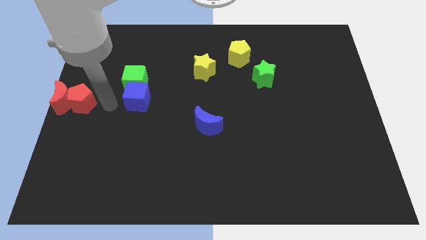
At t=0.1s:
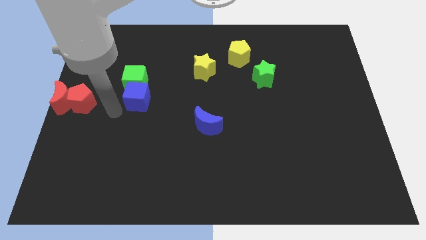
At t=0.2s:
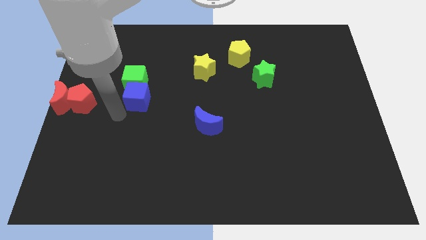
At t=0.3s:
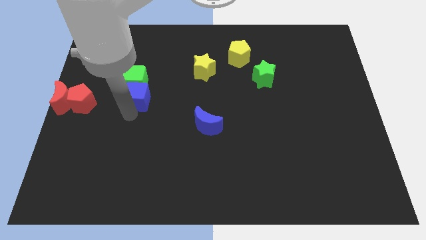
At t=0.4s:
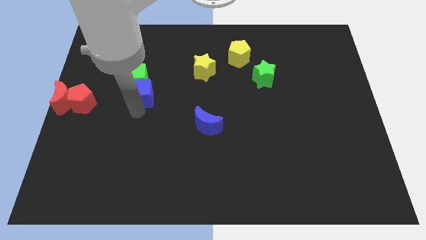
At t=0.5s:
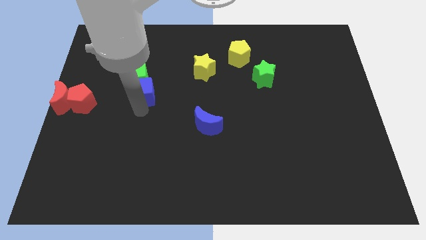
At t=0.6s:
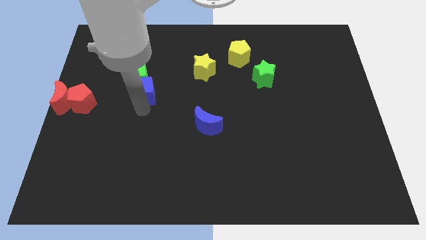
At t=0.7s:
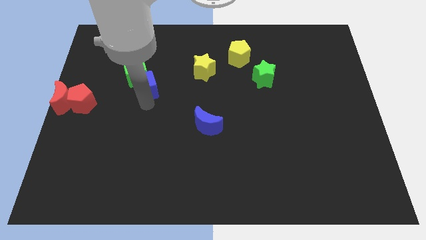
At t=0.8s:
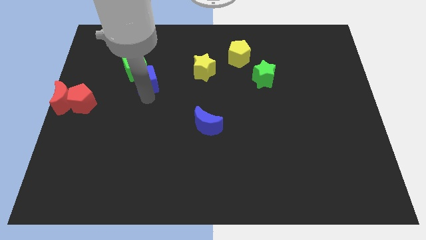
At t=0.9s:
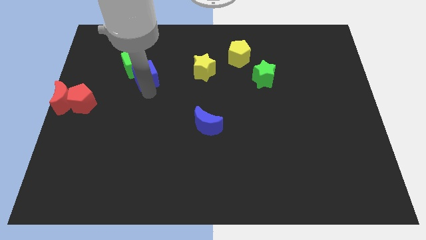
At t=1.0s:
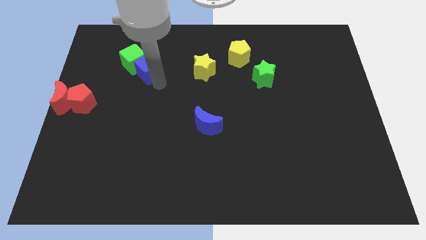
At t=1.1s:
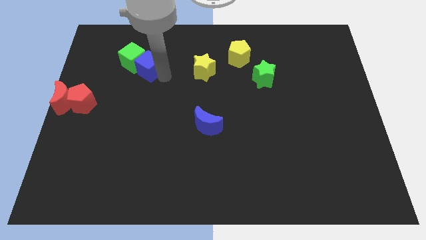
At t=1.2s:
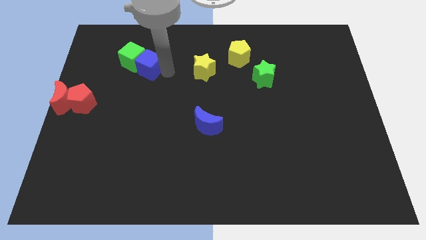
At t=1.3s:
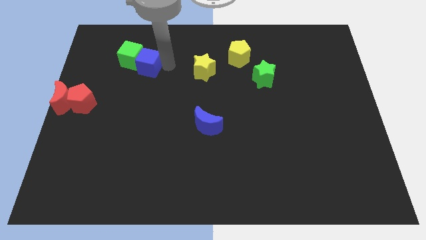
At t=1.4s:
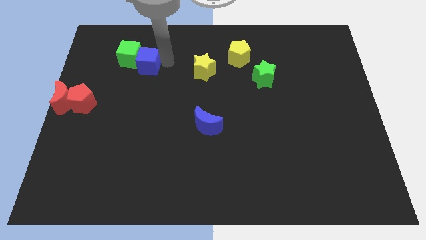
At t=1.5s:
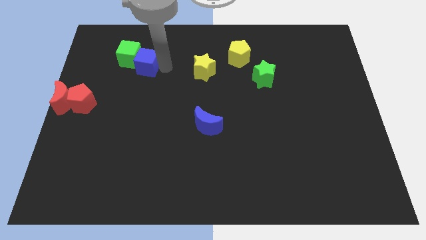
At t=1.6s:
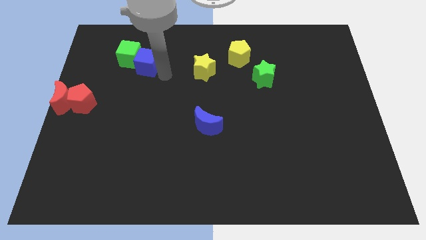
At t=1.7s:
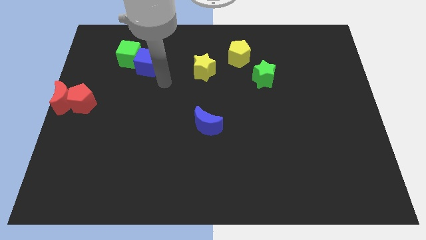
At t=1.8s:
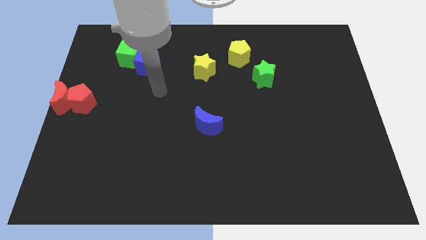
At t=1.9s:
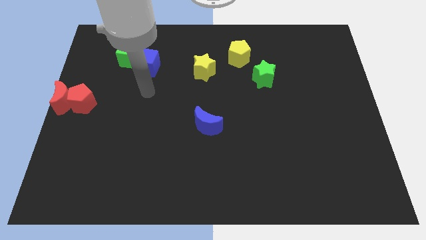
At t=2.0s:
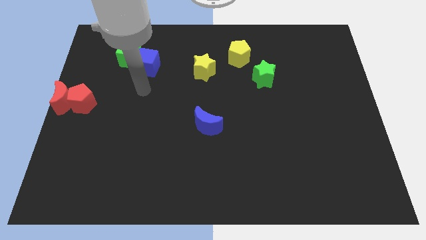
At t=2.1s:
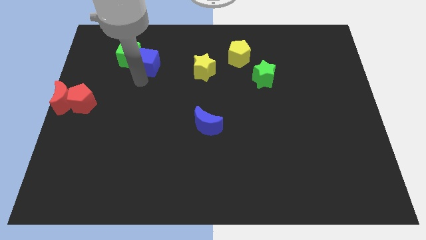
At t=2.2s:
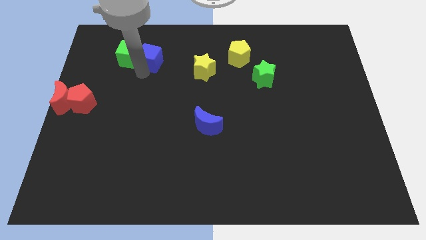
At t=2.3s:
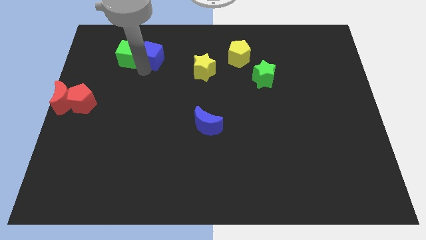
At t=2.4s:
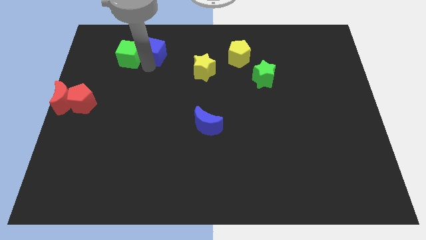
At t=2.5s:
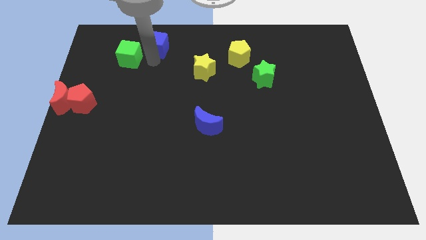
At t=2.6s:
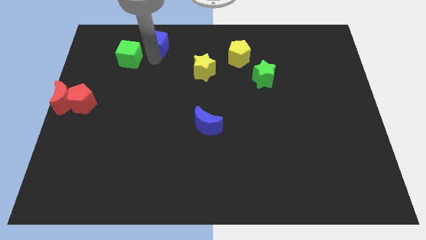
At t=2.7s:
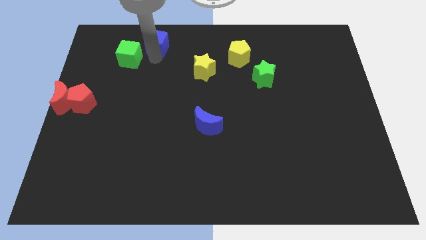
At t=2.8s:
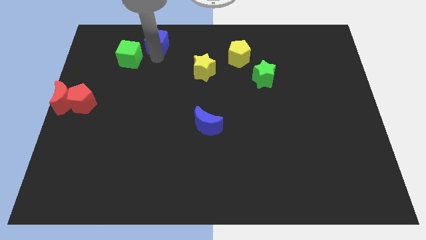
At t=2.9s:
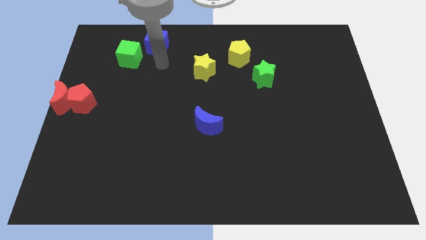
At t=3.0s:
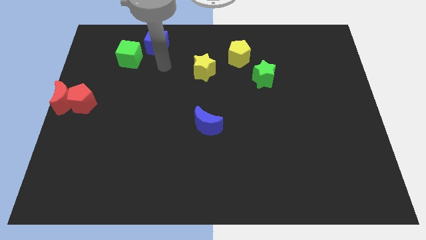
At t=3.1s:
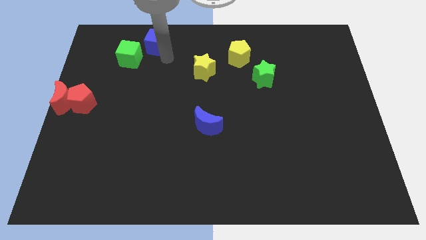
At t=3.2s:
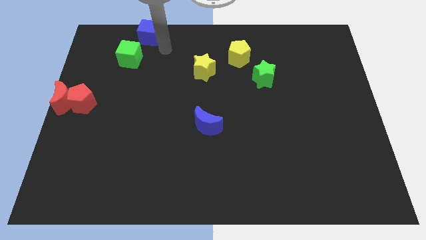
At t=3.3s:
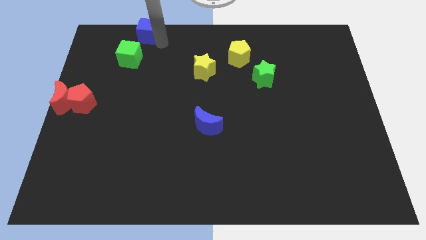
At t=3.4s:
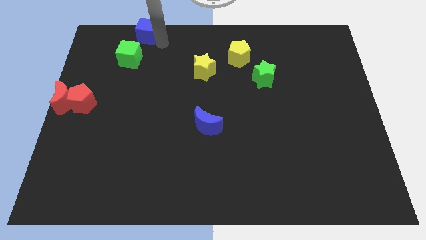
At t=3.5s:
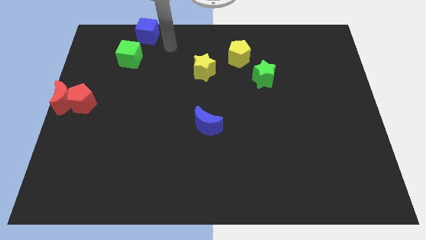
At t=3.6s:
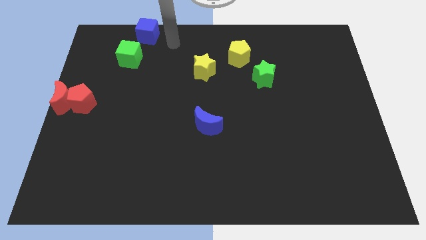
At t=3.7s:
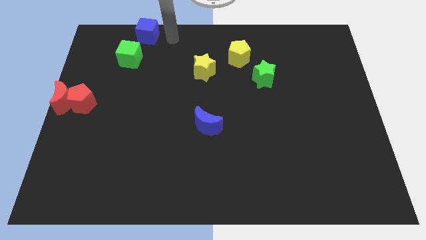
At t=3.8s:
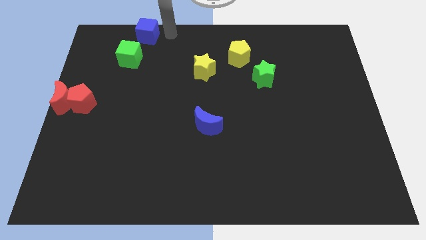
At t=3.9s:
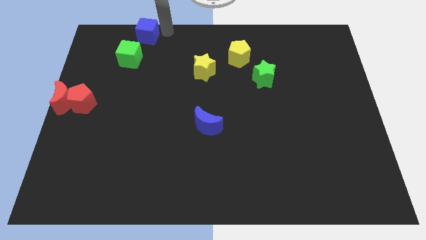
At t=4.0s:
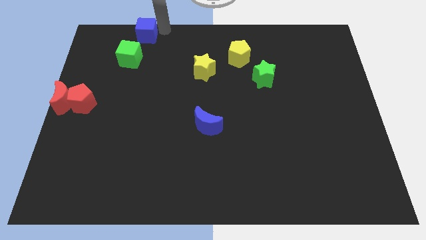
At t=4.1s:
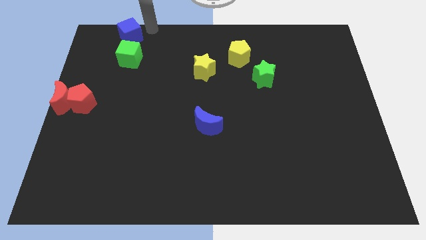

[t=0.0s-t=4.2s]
place the blue cube above the green cube

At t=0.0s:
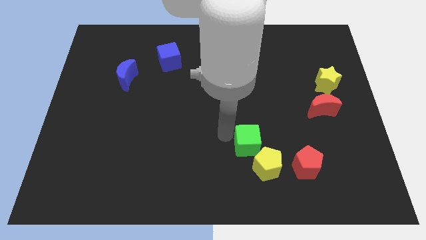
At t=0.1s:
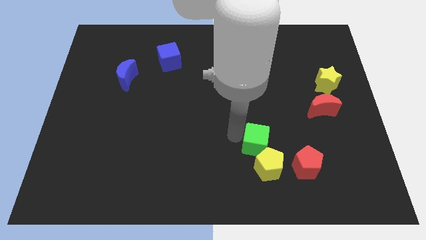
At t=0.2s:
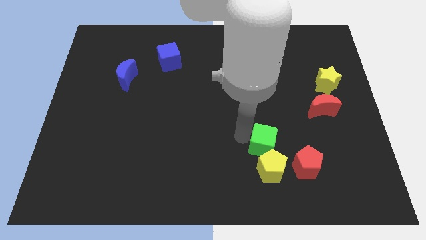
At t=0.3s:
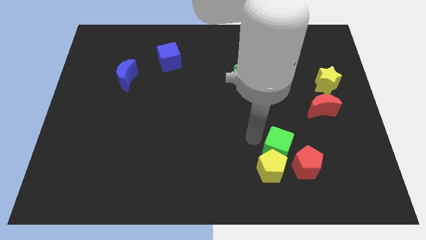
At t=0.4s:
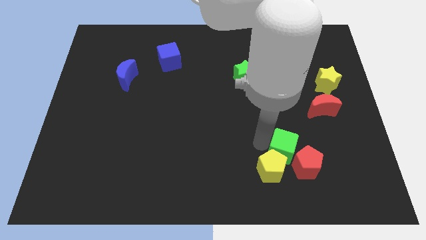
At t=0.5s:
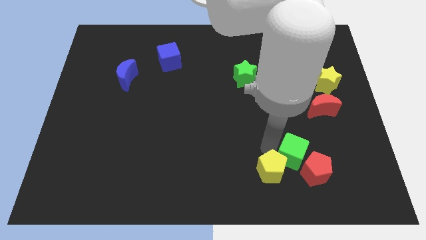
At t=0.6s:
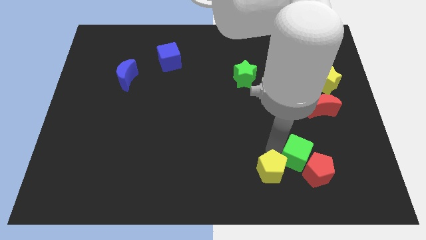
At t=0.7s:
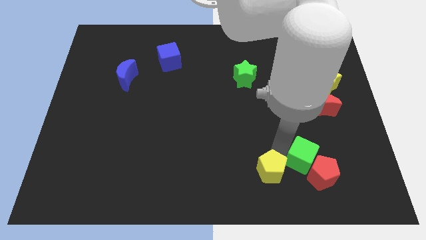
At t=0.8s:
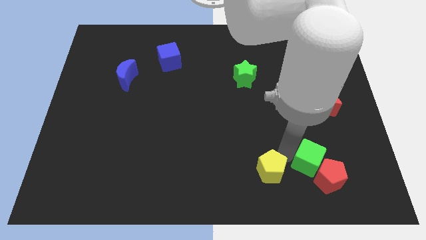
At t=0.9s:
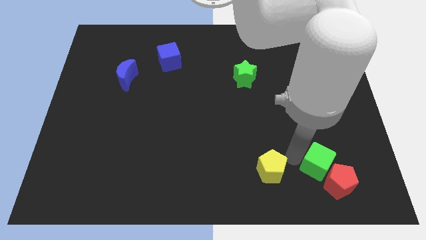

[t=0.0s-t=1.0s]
place green cube to the top left of red pentagon

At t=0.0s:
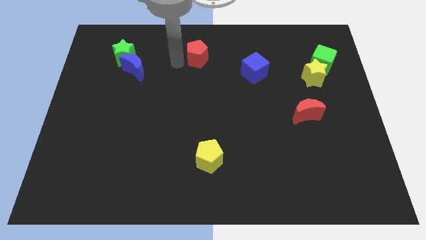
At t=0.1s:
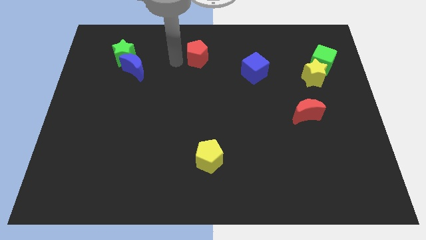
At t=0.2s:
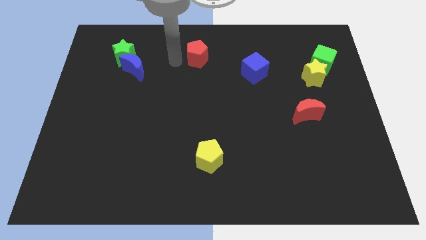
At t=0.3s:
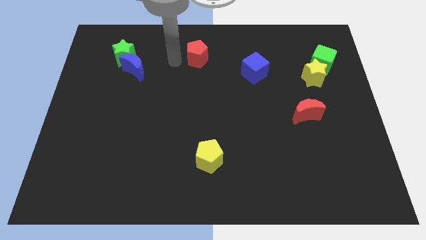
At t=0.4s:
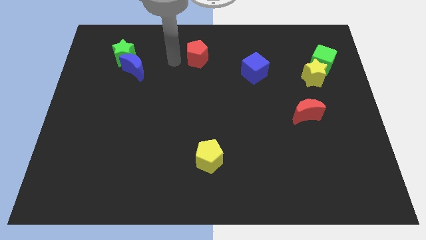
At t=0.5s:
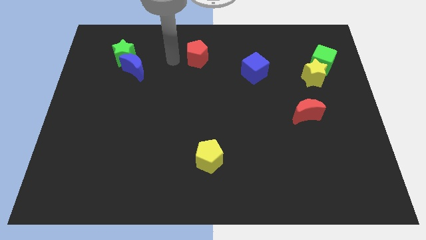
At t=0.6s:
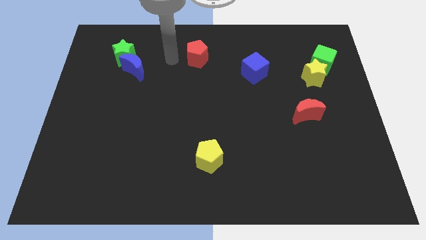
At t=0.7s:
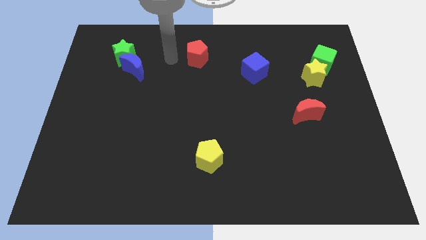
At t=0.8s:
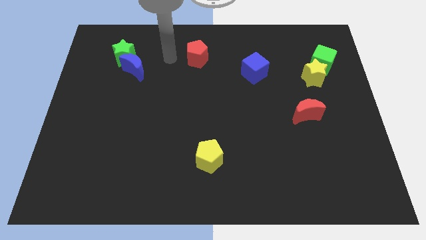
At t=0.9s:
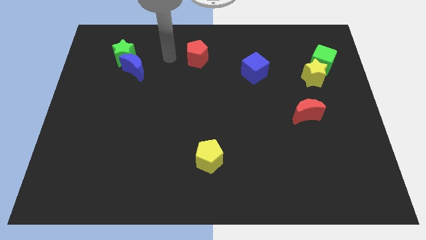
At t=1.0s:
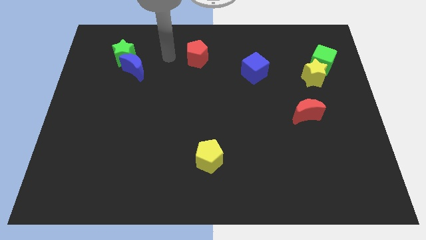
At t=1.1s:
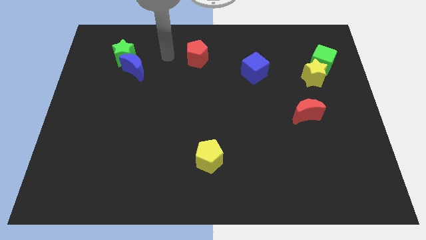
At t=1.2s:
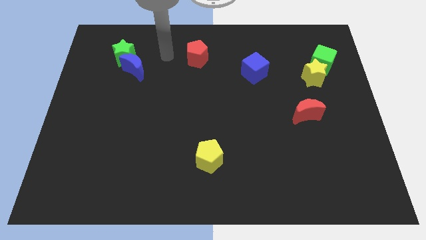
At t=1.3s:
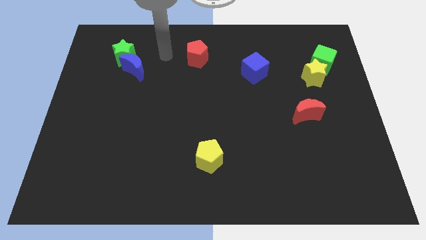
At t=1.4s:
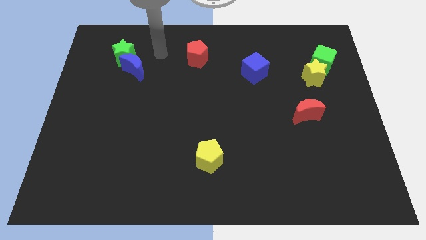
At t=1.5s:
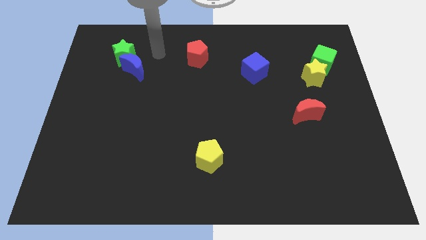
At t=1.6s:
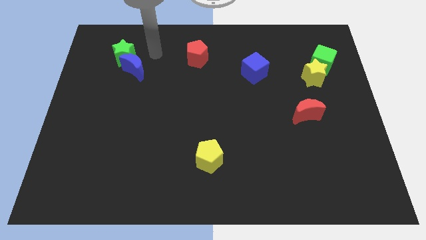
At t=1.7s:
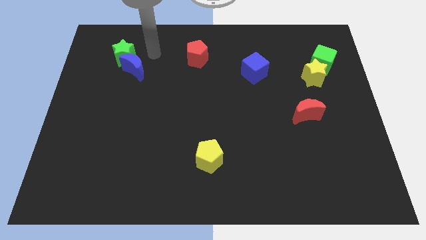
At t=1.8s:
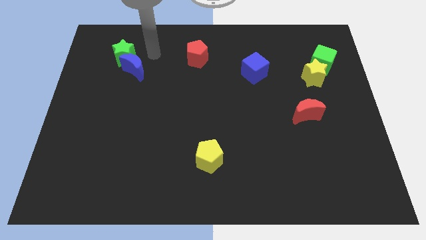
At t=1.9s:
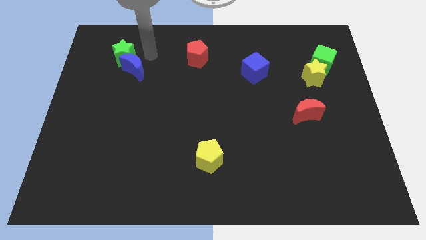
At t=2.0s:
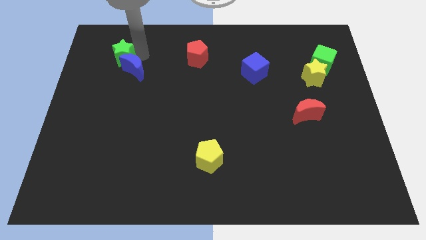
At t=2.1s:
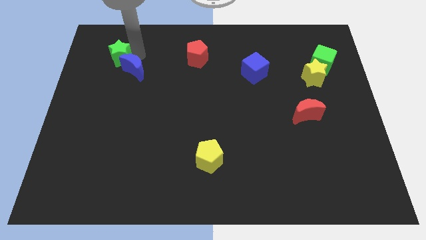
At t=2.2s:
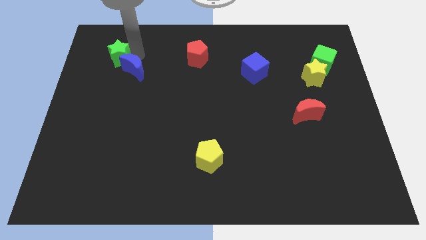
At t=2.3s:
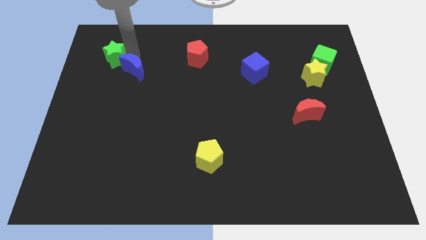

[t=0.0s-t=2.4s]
push the green star slightly to the left

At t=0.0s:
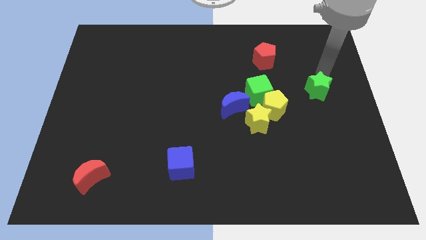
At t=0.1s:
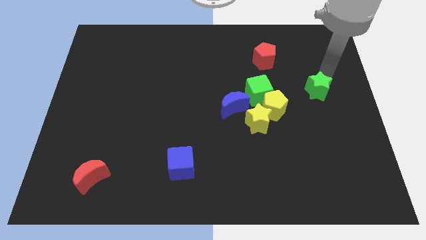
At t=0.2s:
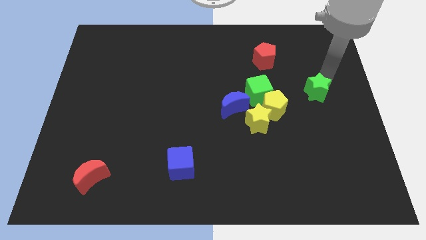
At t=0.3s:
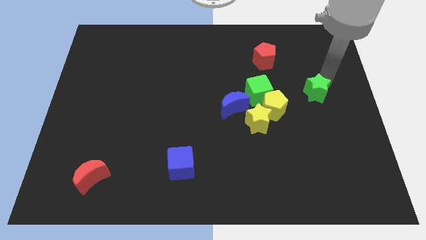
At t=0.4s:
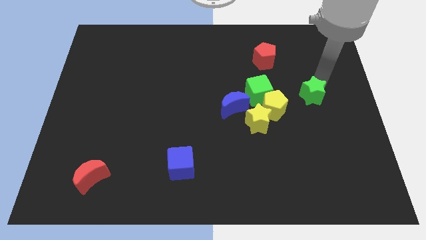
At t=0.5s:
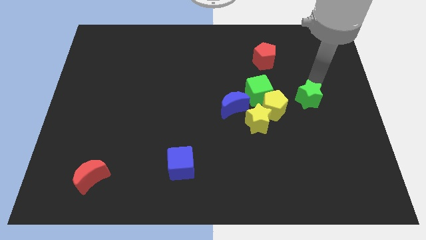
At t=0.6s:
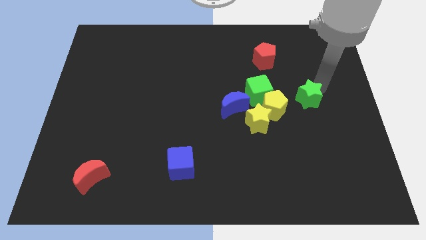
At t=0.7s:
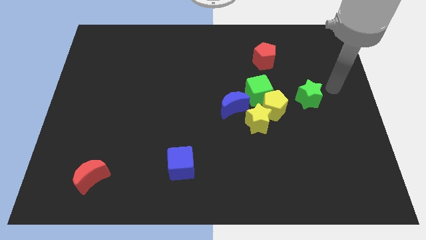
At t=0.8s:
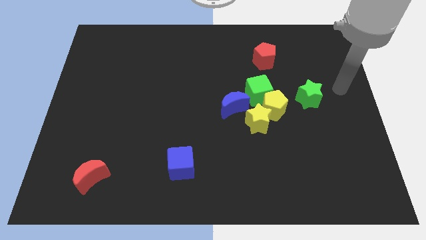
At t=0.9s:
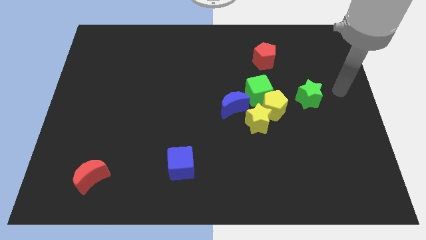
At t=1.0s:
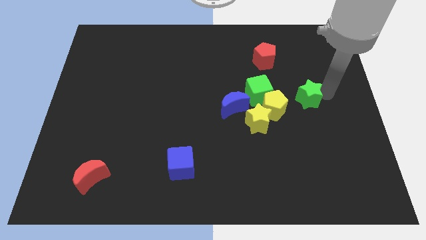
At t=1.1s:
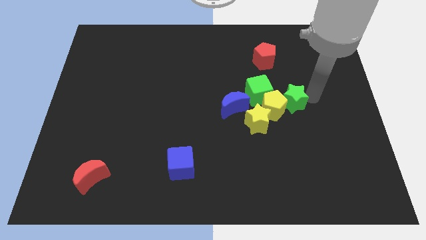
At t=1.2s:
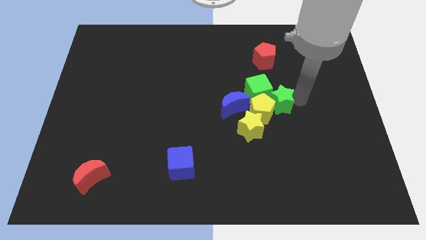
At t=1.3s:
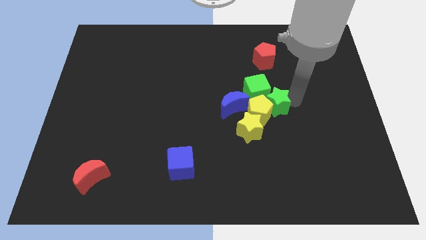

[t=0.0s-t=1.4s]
push the green star into yellow pentagon
